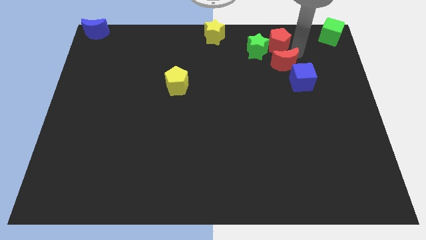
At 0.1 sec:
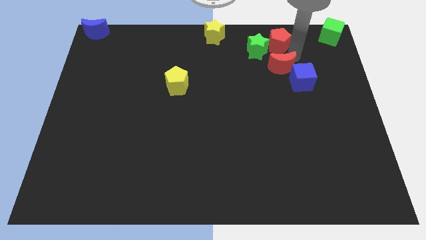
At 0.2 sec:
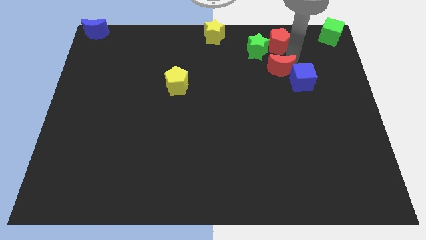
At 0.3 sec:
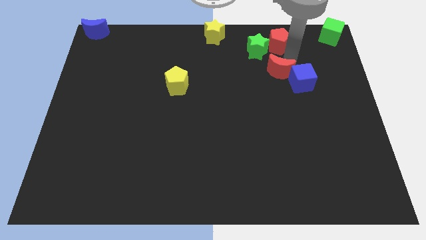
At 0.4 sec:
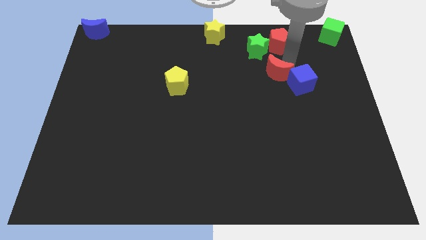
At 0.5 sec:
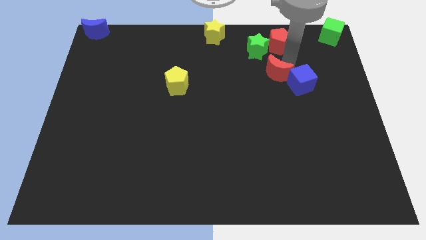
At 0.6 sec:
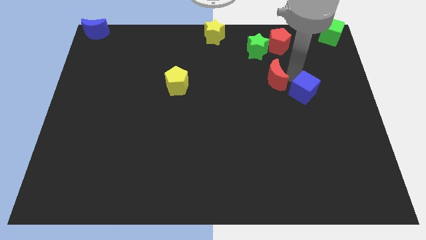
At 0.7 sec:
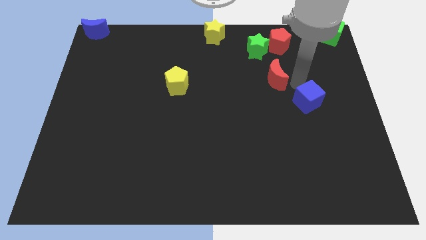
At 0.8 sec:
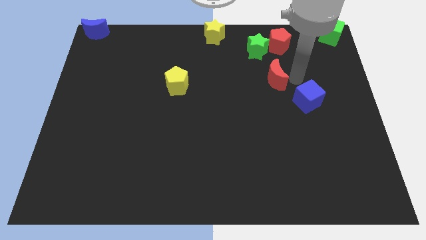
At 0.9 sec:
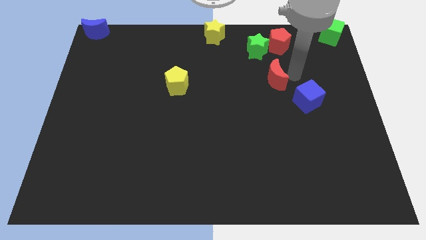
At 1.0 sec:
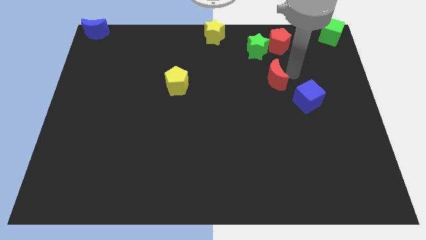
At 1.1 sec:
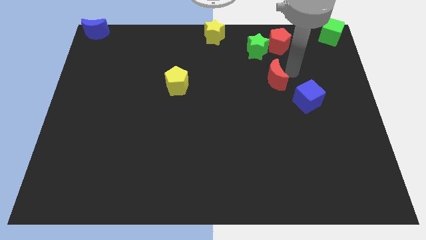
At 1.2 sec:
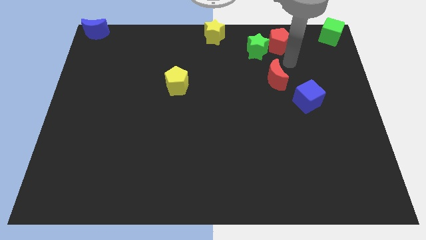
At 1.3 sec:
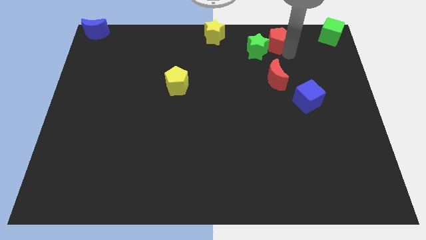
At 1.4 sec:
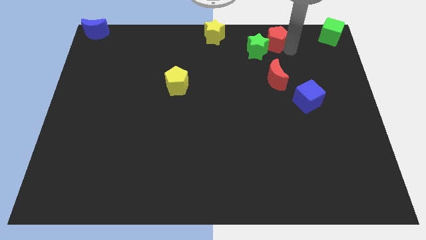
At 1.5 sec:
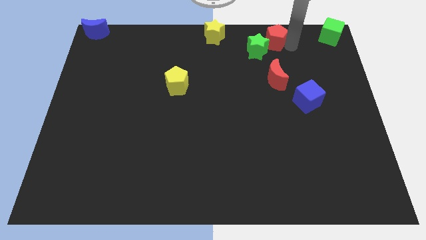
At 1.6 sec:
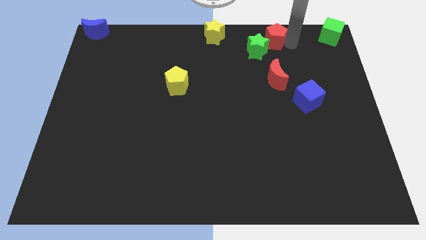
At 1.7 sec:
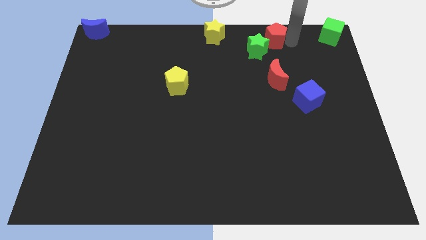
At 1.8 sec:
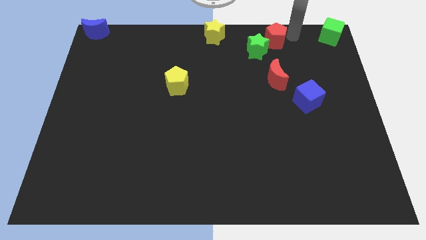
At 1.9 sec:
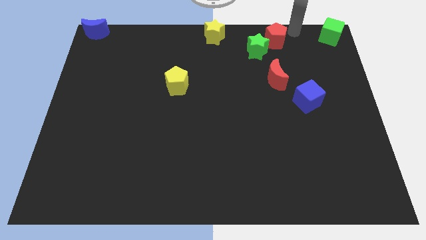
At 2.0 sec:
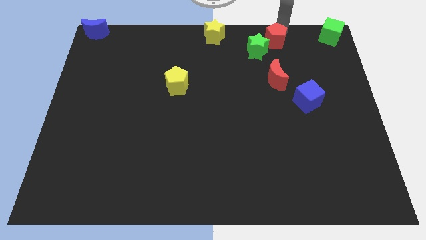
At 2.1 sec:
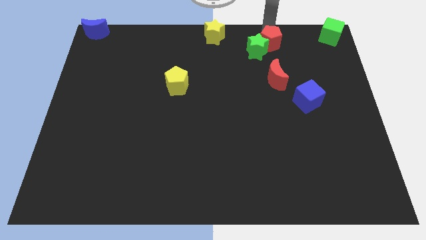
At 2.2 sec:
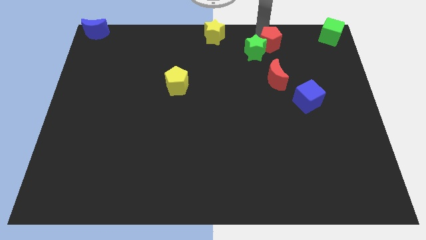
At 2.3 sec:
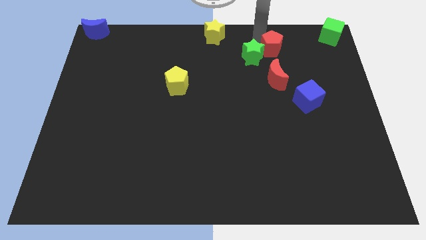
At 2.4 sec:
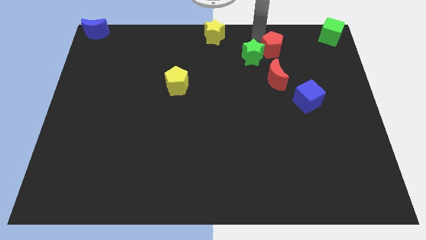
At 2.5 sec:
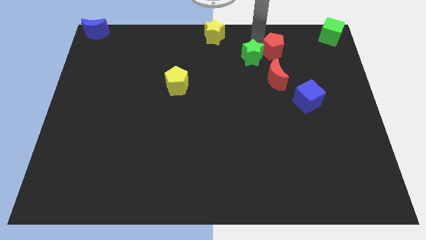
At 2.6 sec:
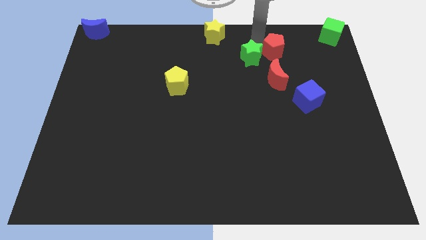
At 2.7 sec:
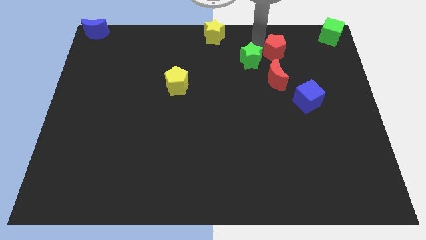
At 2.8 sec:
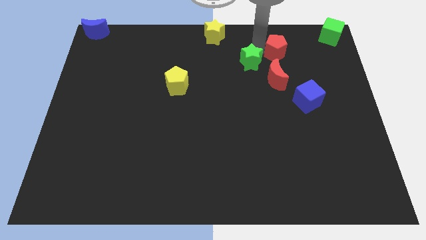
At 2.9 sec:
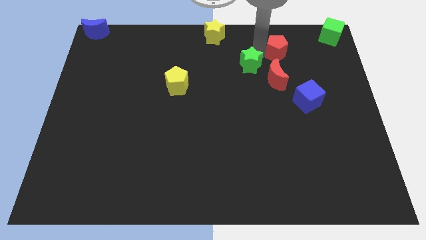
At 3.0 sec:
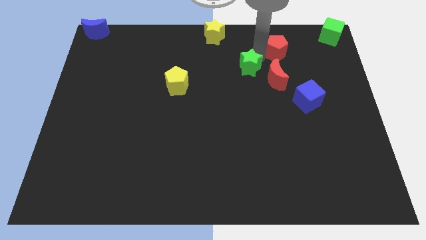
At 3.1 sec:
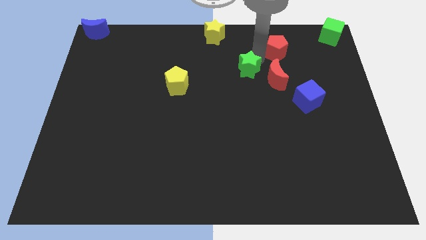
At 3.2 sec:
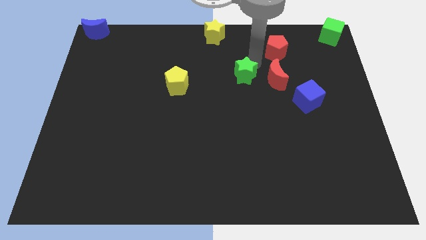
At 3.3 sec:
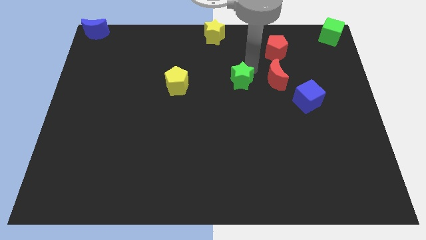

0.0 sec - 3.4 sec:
separate the red moon and blue cube

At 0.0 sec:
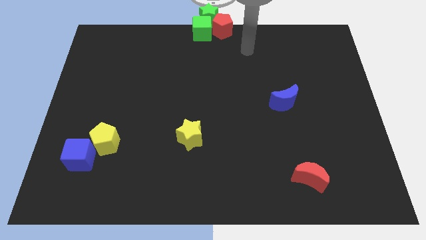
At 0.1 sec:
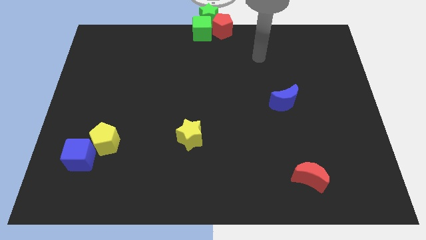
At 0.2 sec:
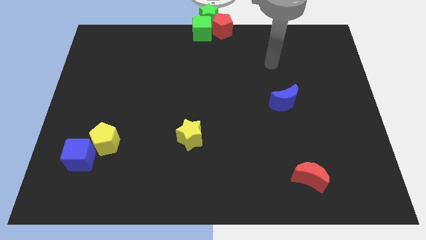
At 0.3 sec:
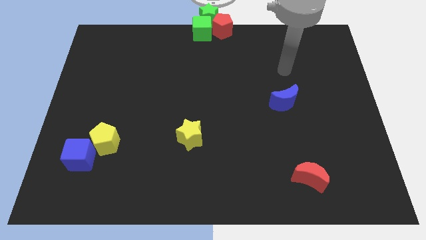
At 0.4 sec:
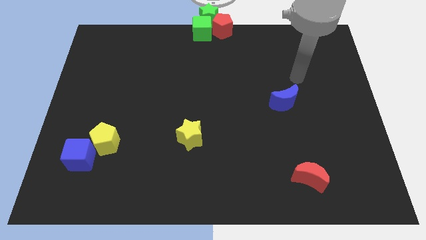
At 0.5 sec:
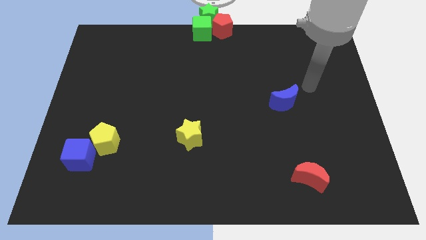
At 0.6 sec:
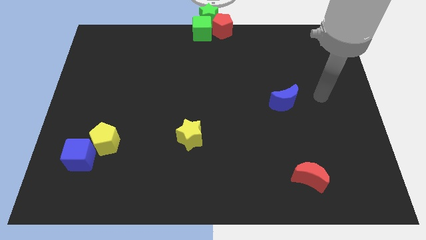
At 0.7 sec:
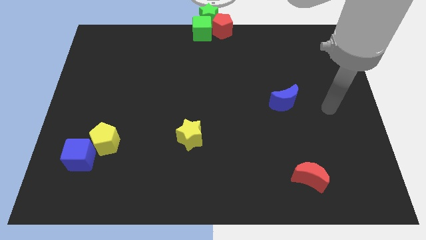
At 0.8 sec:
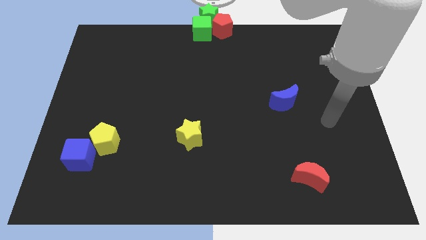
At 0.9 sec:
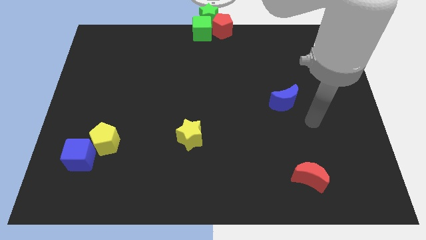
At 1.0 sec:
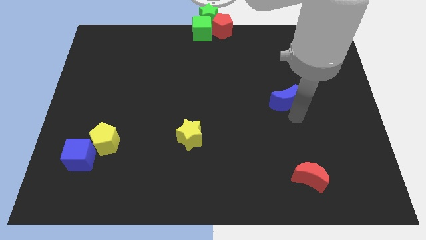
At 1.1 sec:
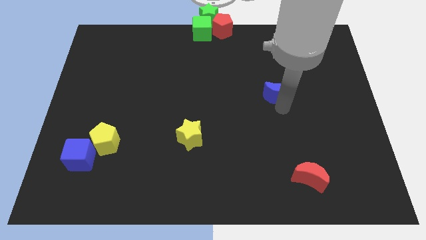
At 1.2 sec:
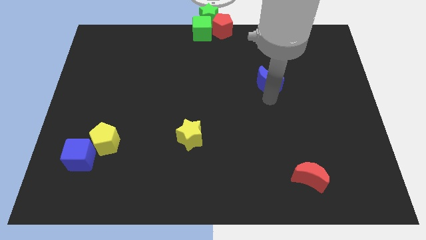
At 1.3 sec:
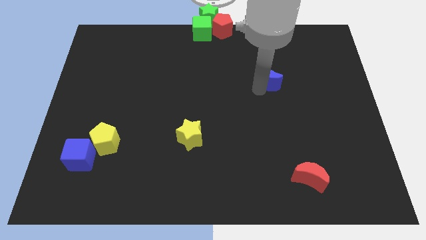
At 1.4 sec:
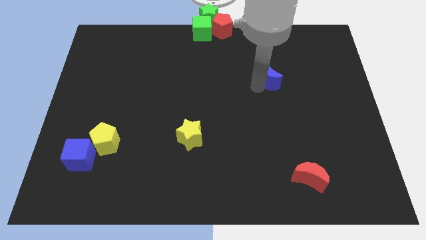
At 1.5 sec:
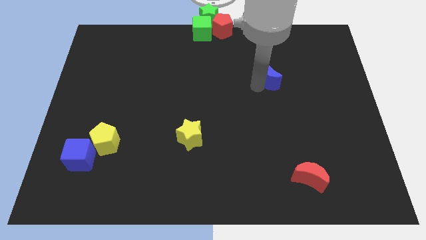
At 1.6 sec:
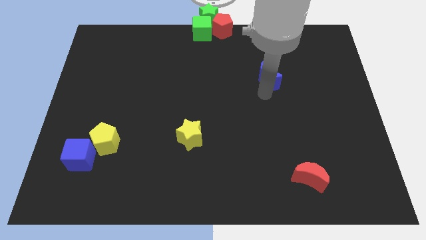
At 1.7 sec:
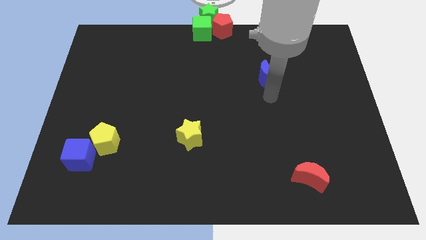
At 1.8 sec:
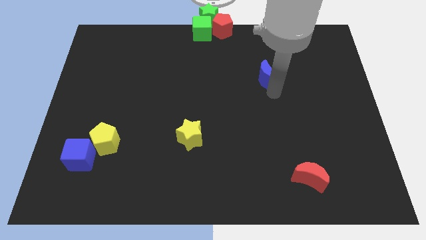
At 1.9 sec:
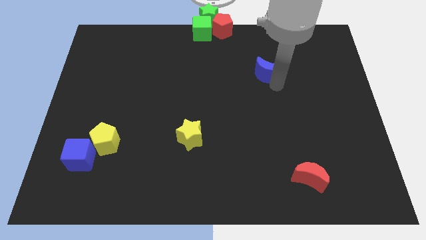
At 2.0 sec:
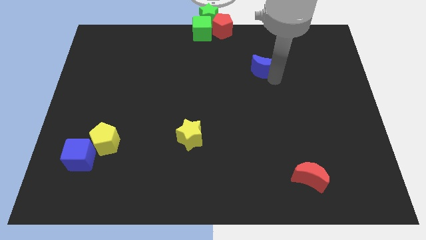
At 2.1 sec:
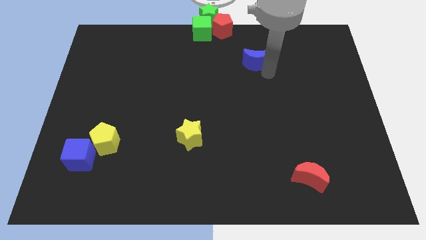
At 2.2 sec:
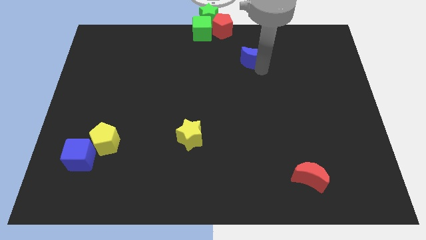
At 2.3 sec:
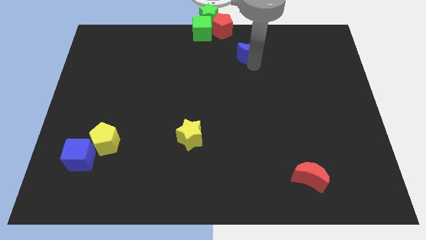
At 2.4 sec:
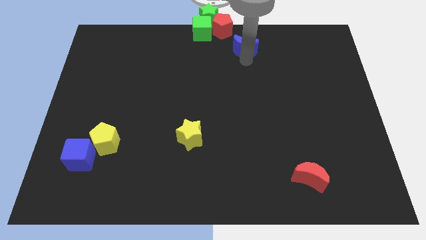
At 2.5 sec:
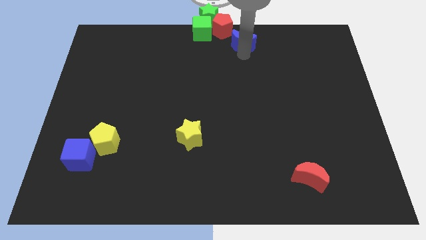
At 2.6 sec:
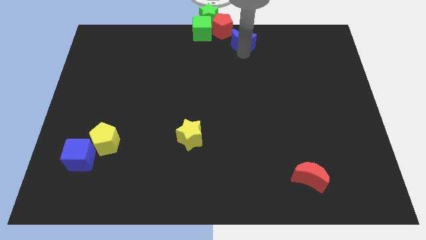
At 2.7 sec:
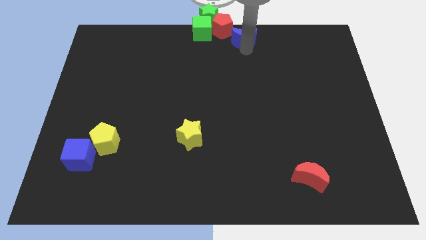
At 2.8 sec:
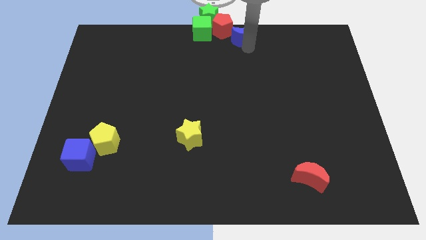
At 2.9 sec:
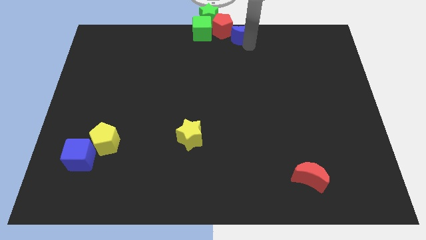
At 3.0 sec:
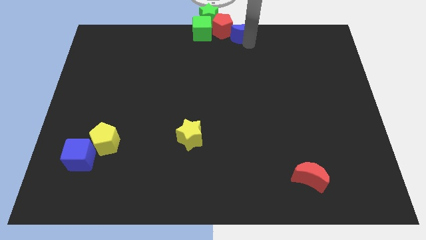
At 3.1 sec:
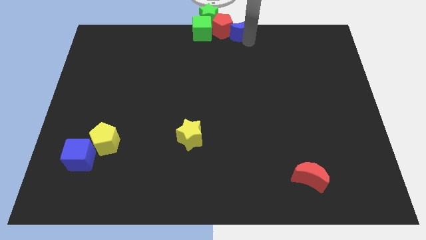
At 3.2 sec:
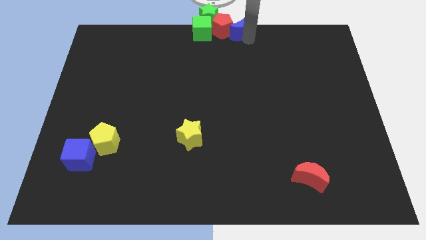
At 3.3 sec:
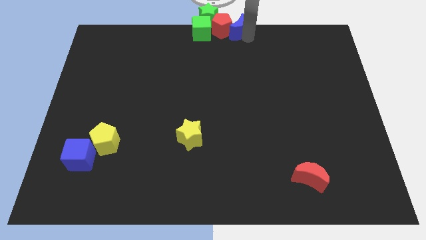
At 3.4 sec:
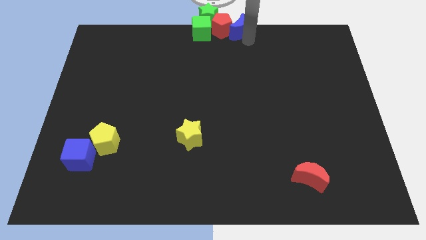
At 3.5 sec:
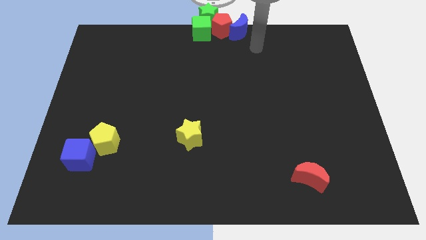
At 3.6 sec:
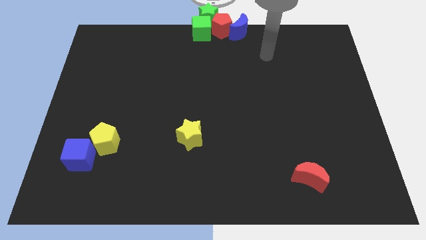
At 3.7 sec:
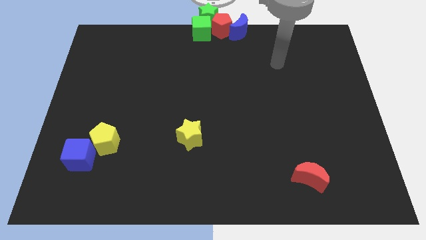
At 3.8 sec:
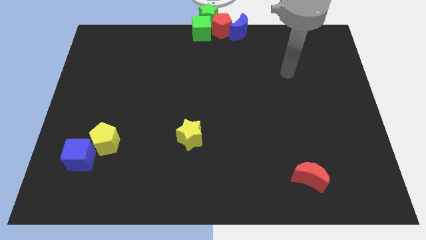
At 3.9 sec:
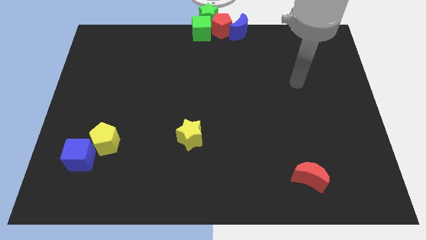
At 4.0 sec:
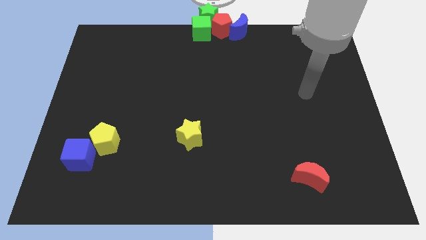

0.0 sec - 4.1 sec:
push the blue crescent to the right of the red pentagon

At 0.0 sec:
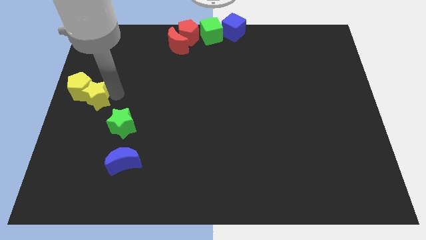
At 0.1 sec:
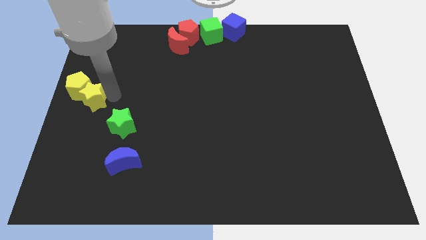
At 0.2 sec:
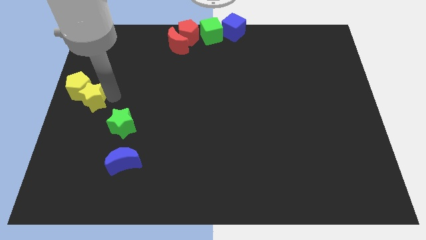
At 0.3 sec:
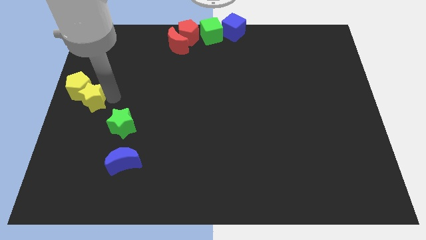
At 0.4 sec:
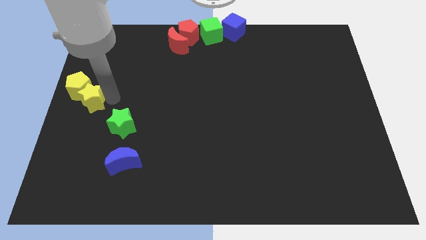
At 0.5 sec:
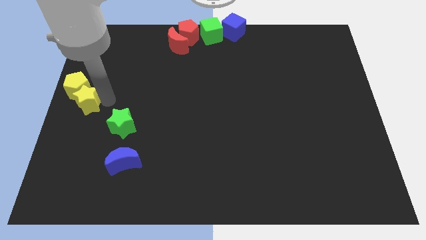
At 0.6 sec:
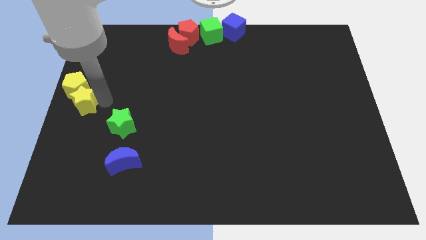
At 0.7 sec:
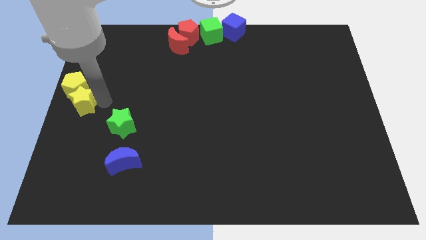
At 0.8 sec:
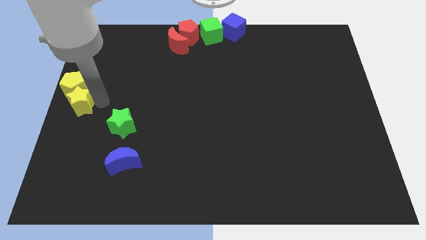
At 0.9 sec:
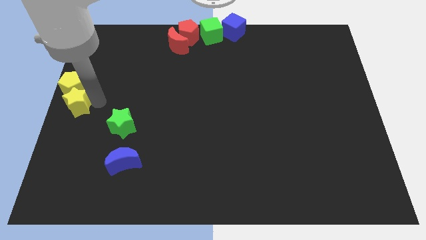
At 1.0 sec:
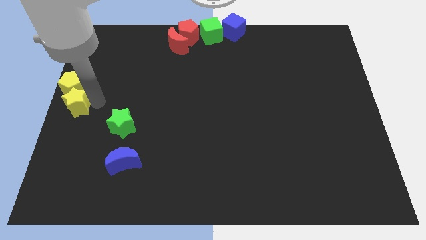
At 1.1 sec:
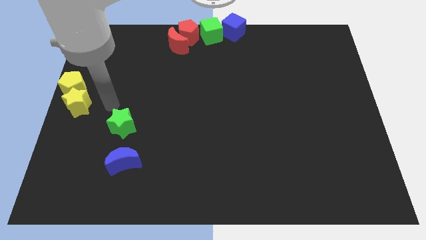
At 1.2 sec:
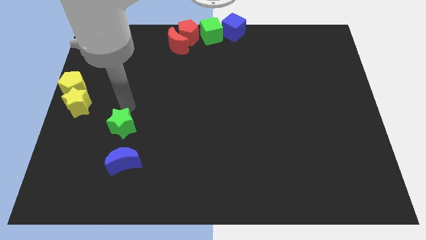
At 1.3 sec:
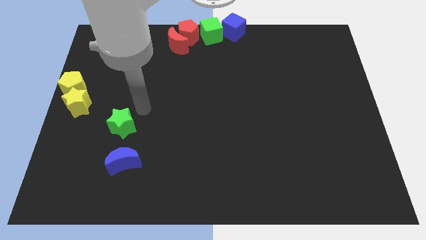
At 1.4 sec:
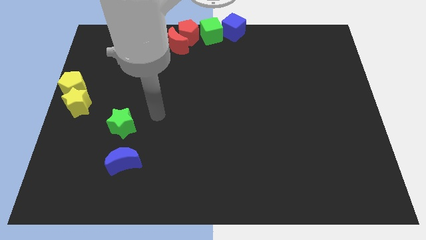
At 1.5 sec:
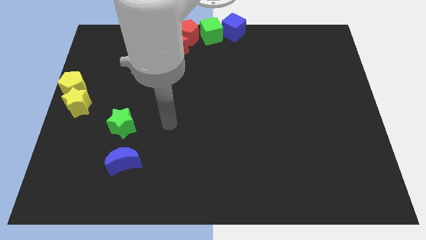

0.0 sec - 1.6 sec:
place yellow star below the yellow pentagon

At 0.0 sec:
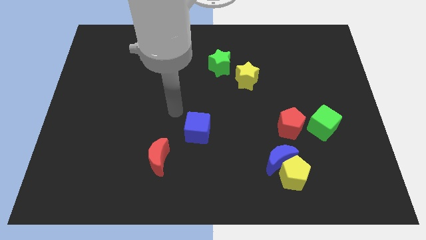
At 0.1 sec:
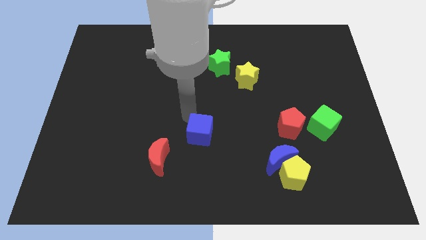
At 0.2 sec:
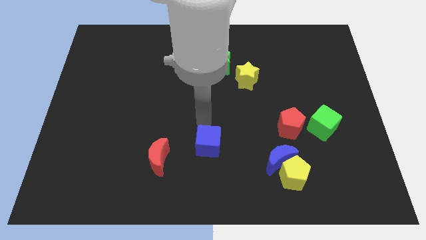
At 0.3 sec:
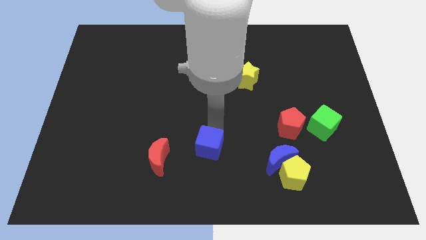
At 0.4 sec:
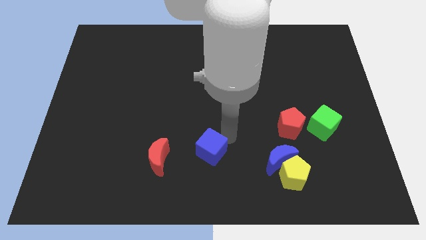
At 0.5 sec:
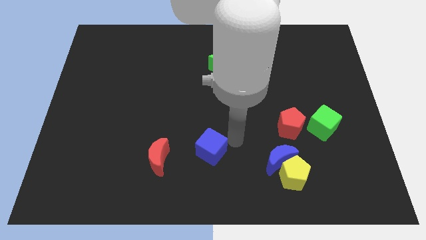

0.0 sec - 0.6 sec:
move the blue cube to the right of the red moon
